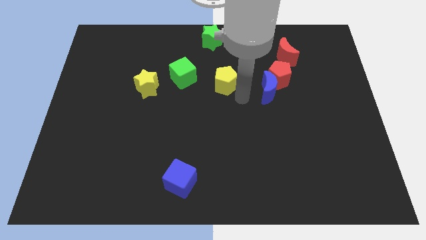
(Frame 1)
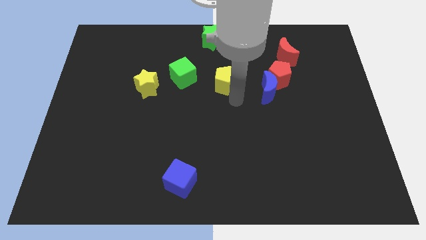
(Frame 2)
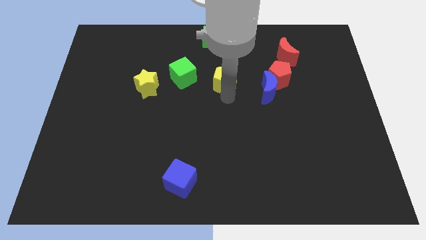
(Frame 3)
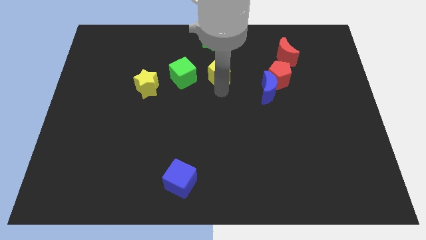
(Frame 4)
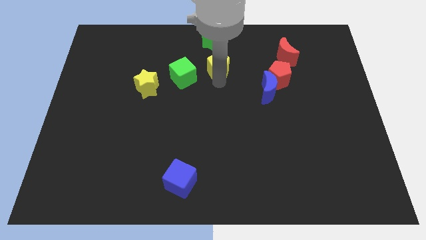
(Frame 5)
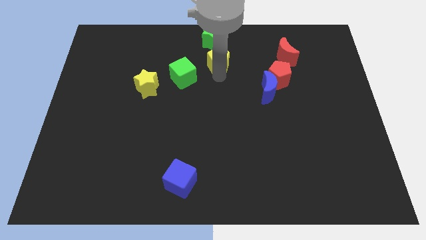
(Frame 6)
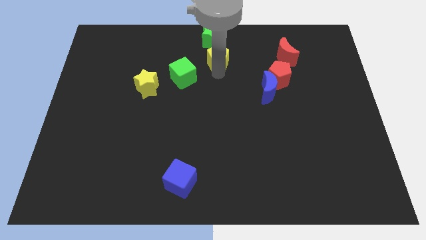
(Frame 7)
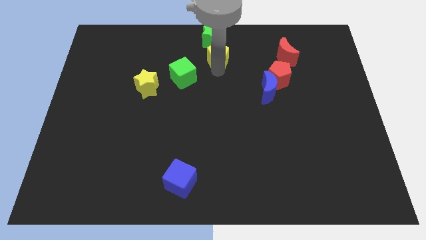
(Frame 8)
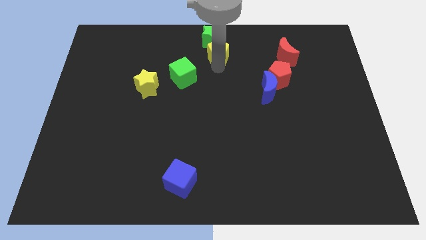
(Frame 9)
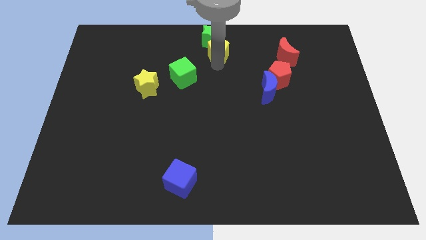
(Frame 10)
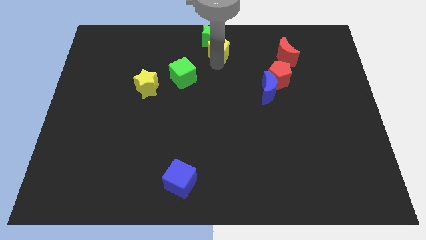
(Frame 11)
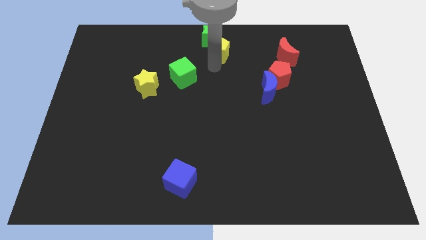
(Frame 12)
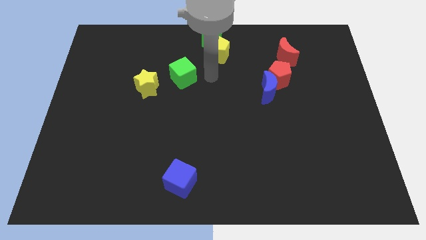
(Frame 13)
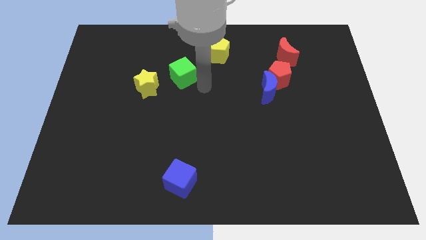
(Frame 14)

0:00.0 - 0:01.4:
move the yellow pentagon into the green star

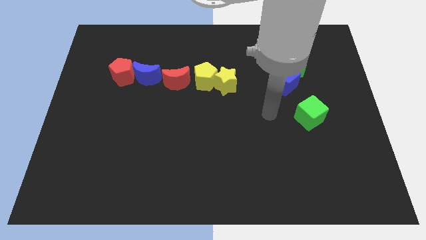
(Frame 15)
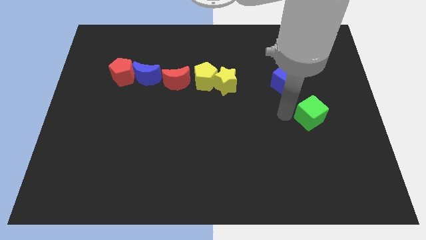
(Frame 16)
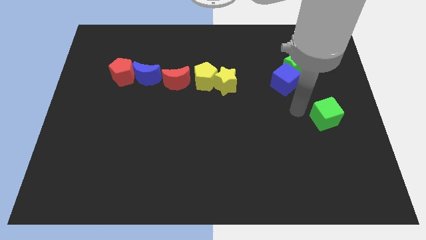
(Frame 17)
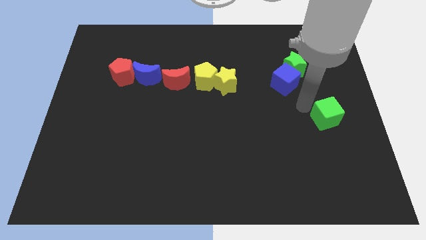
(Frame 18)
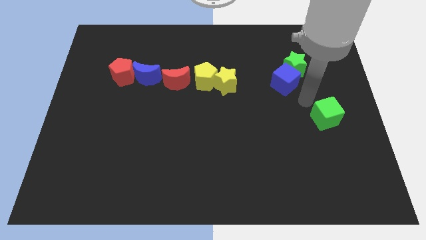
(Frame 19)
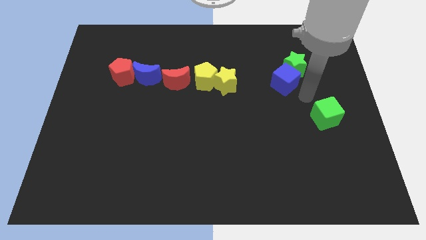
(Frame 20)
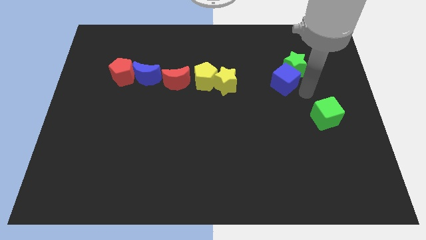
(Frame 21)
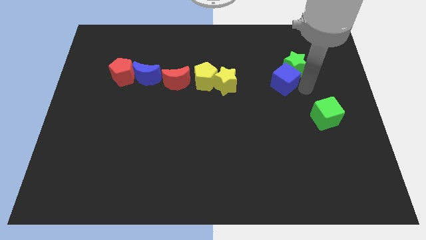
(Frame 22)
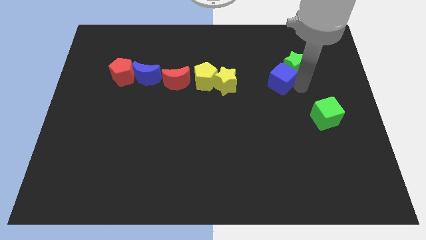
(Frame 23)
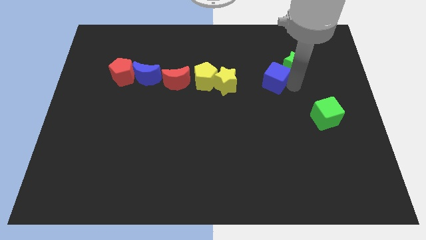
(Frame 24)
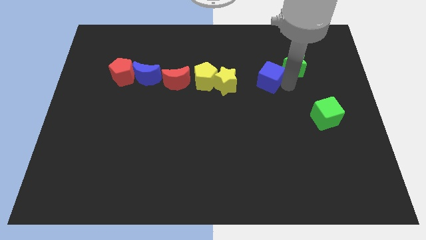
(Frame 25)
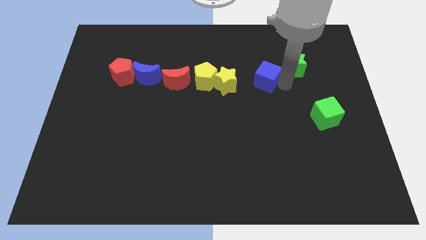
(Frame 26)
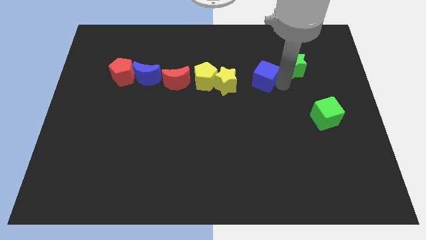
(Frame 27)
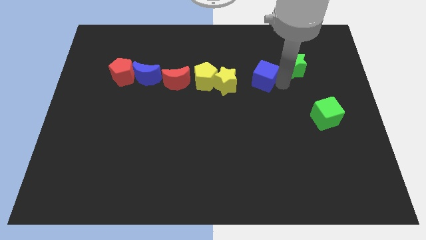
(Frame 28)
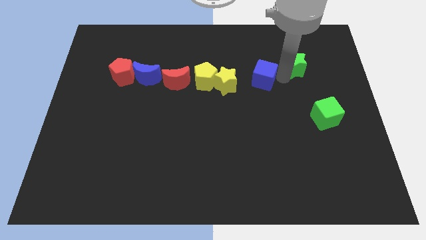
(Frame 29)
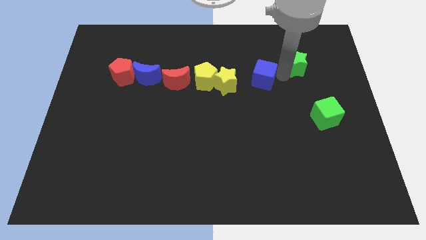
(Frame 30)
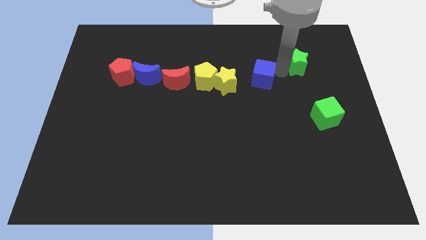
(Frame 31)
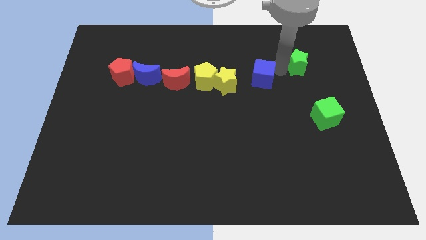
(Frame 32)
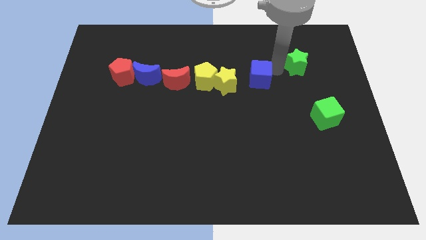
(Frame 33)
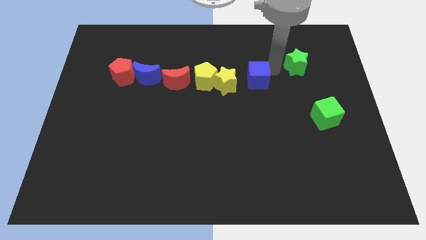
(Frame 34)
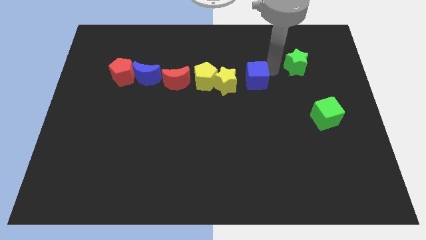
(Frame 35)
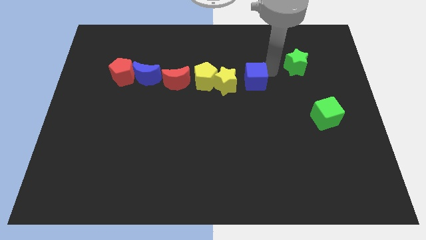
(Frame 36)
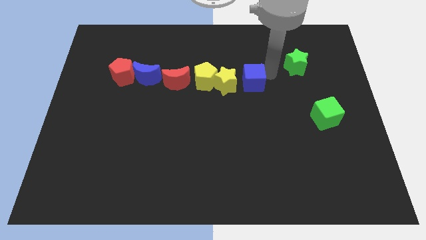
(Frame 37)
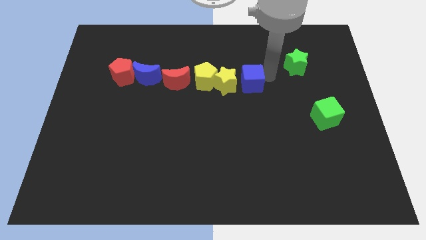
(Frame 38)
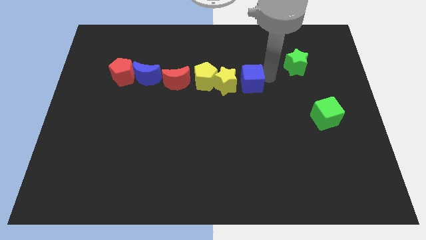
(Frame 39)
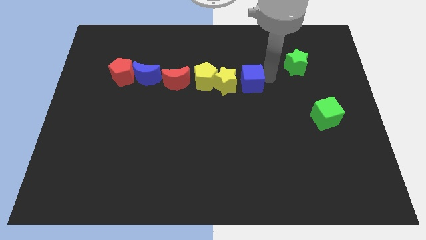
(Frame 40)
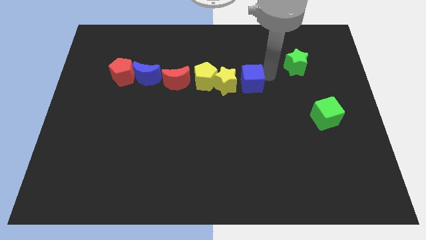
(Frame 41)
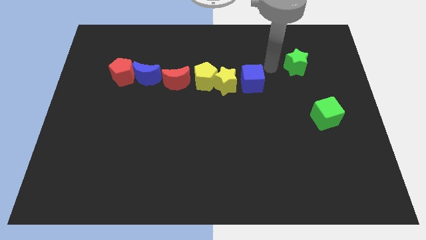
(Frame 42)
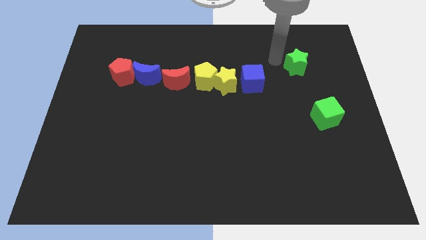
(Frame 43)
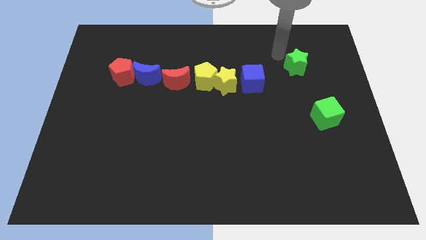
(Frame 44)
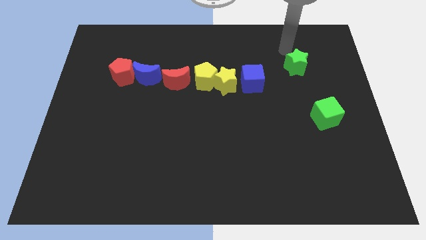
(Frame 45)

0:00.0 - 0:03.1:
put both the blue cube and green cube diagonal to each other

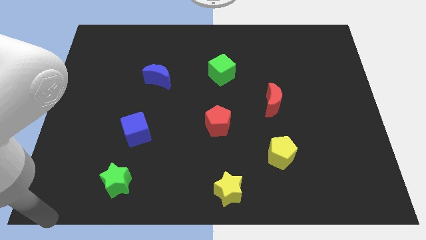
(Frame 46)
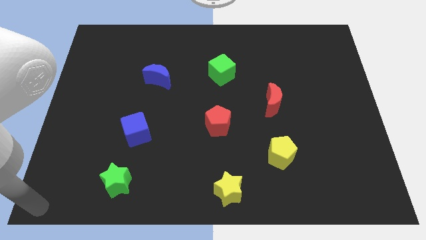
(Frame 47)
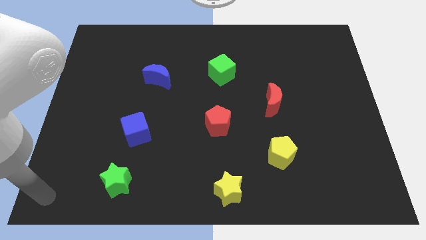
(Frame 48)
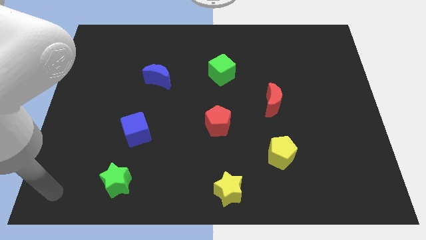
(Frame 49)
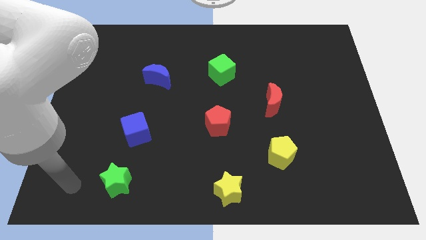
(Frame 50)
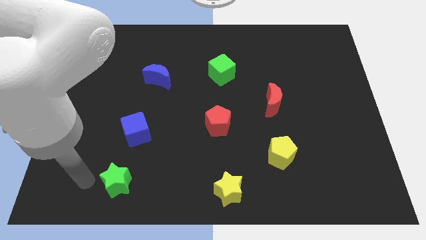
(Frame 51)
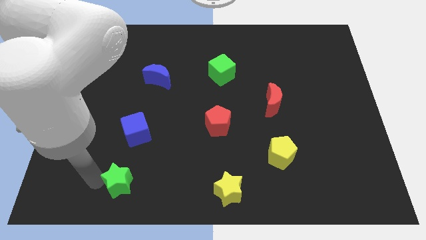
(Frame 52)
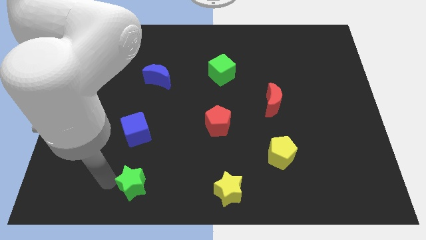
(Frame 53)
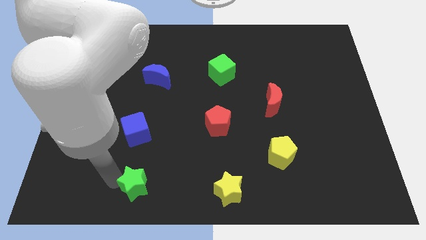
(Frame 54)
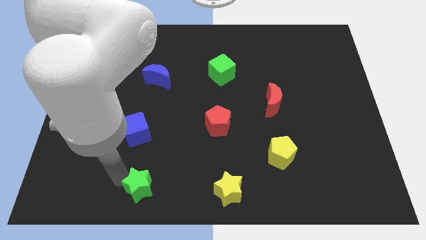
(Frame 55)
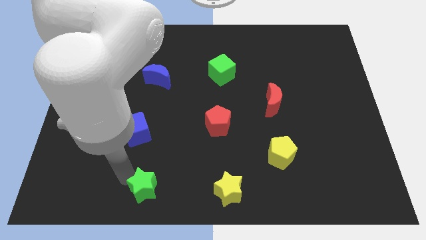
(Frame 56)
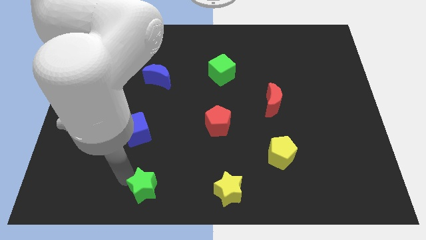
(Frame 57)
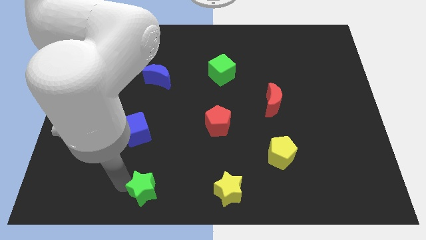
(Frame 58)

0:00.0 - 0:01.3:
slightly move the green star to the right side of the board

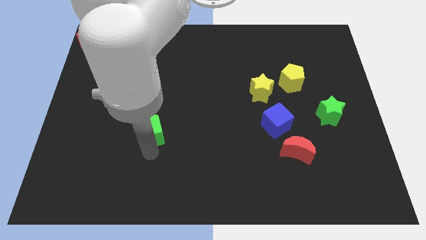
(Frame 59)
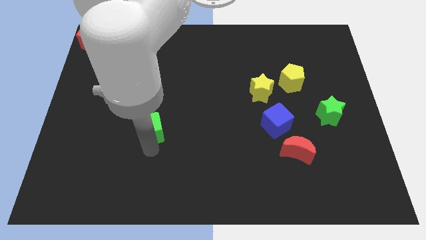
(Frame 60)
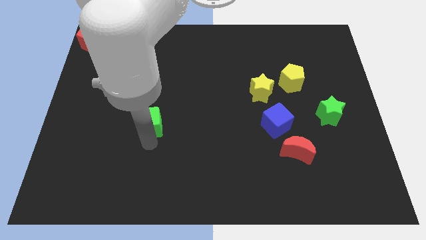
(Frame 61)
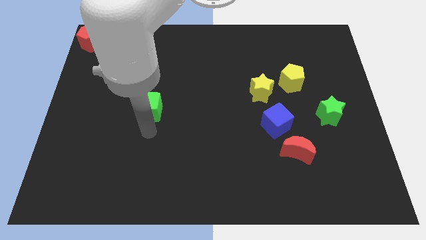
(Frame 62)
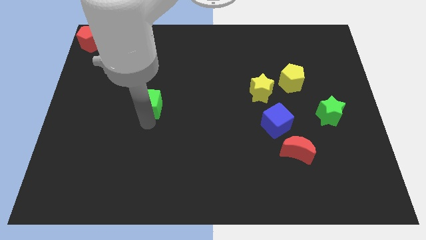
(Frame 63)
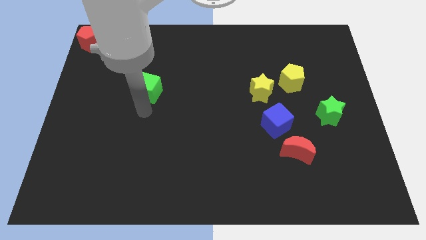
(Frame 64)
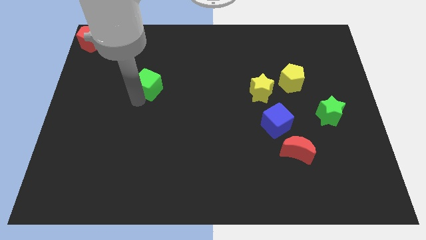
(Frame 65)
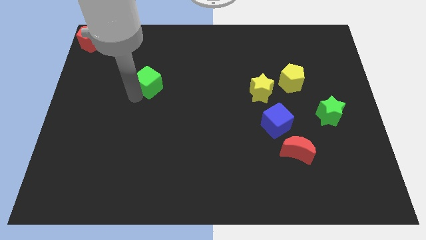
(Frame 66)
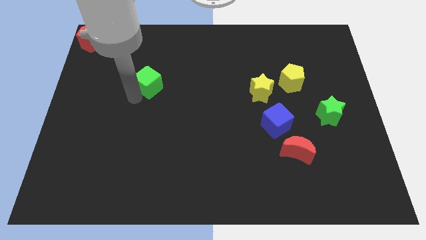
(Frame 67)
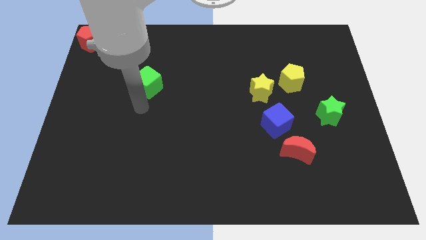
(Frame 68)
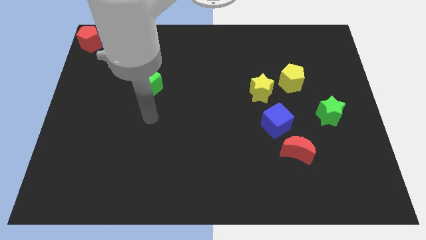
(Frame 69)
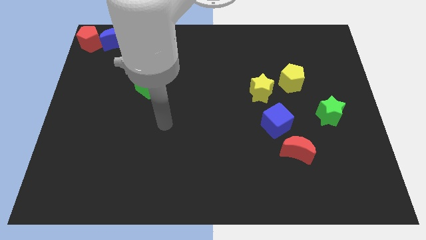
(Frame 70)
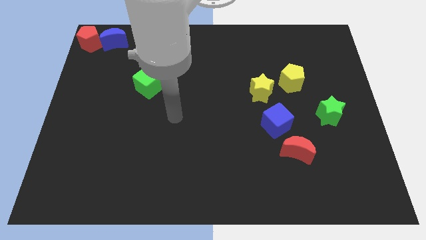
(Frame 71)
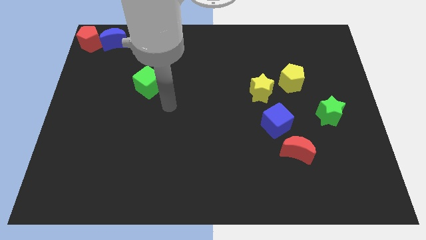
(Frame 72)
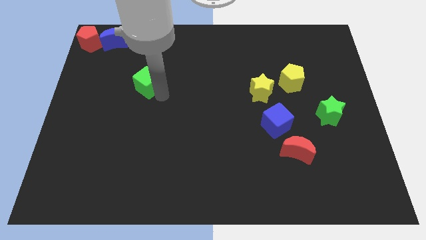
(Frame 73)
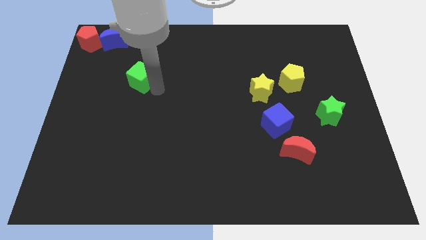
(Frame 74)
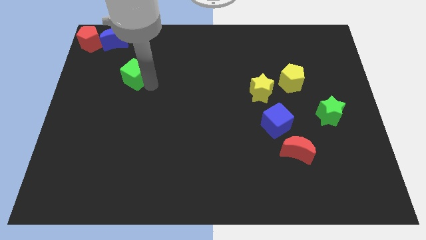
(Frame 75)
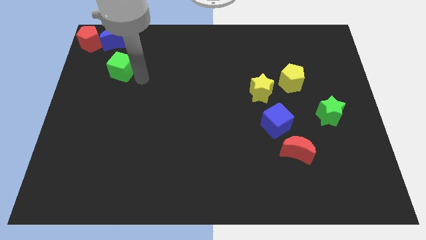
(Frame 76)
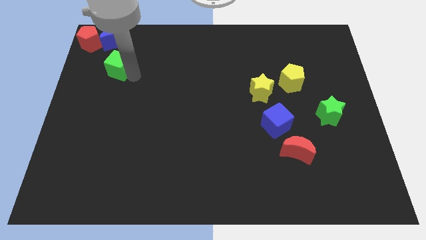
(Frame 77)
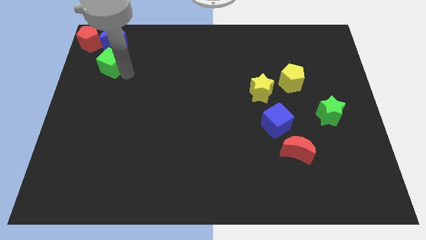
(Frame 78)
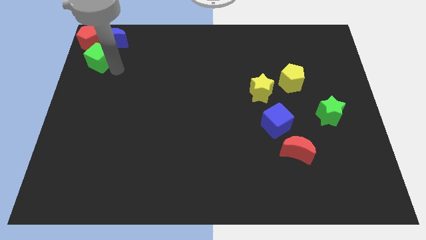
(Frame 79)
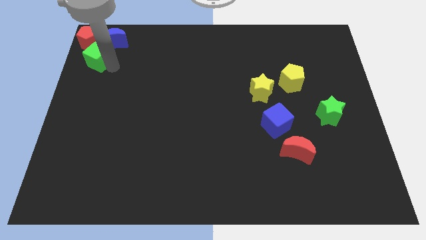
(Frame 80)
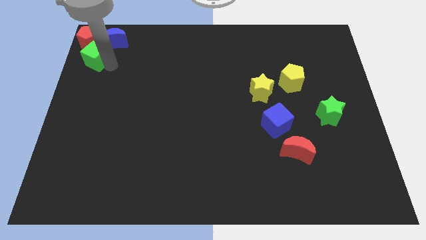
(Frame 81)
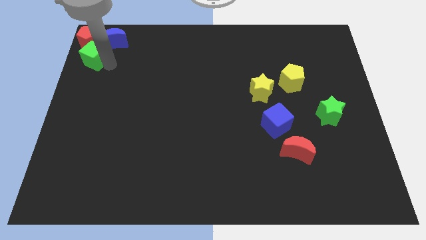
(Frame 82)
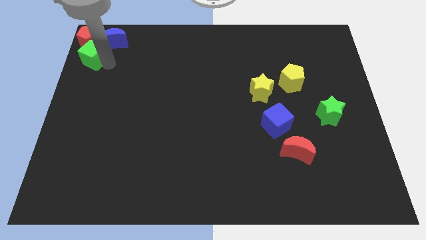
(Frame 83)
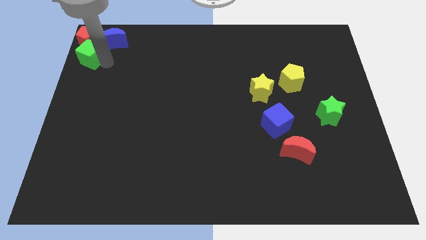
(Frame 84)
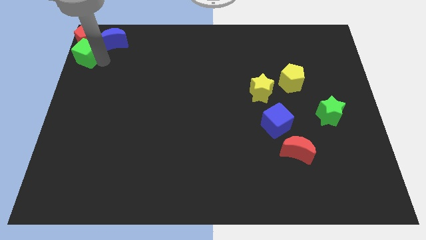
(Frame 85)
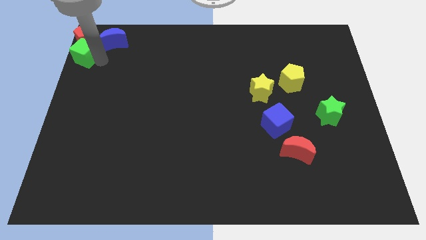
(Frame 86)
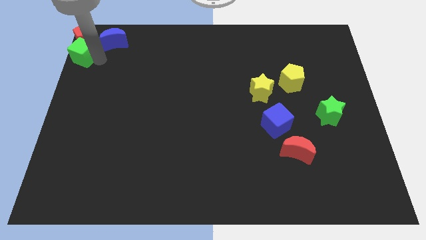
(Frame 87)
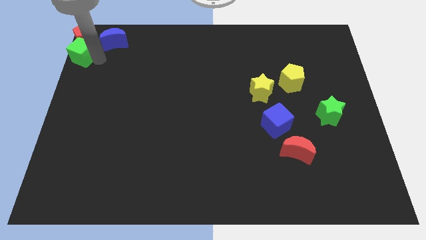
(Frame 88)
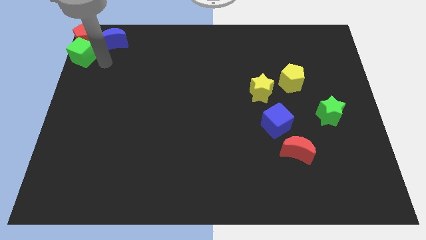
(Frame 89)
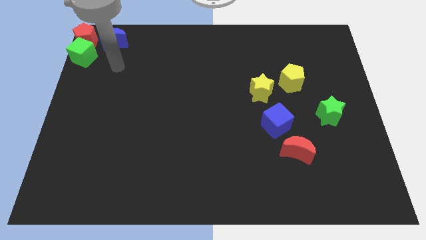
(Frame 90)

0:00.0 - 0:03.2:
push green cube to the top left corner
